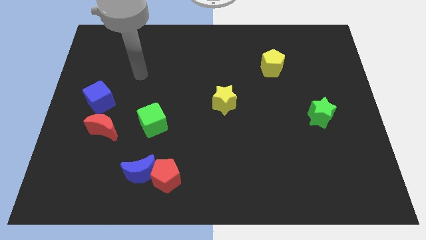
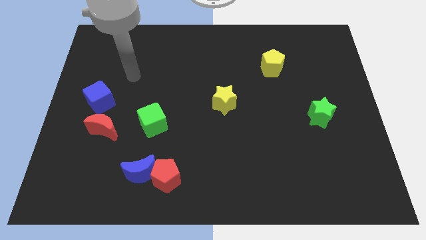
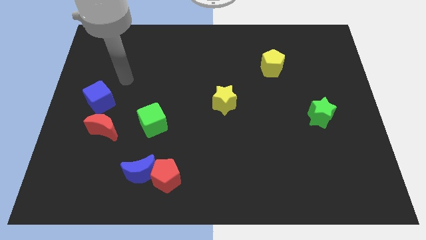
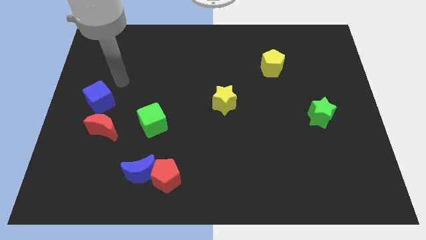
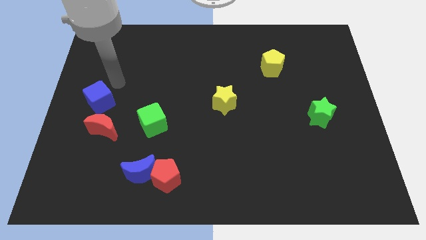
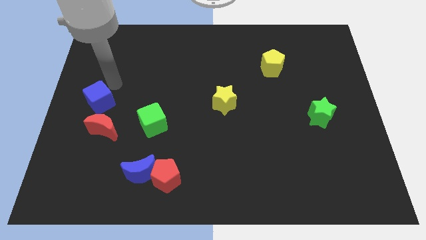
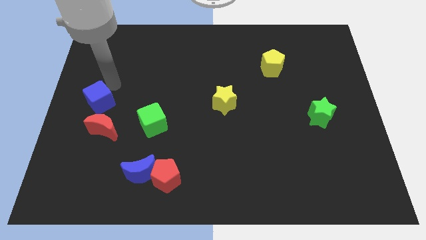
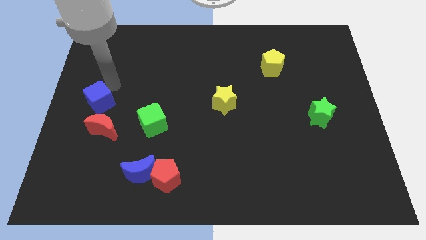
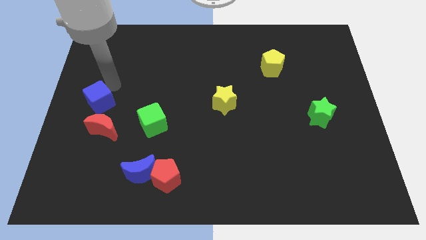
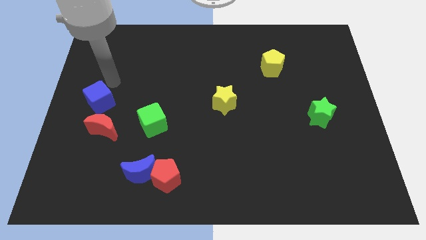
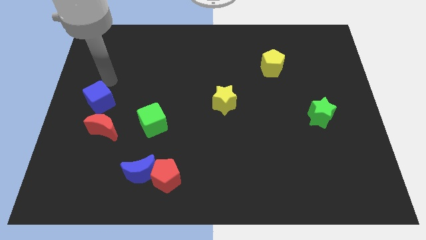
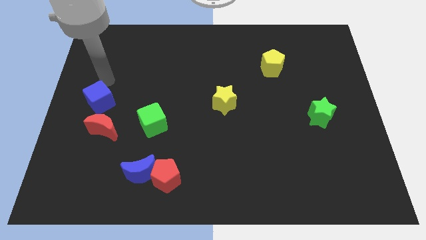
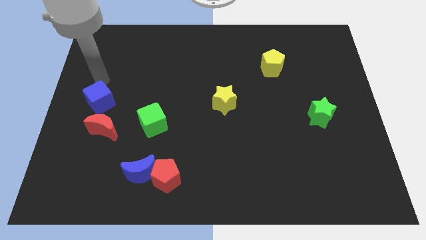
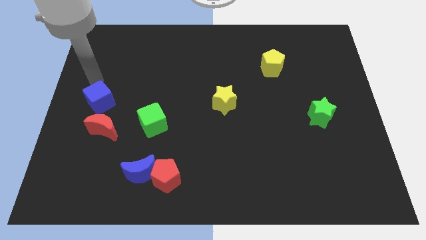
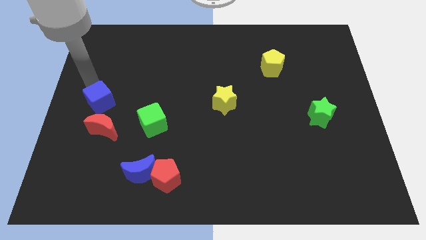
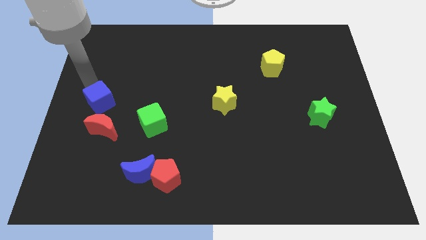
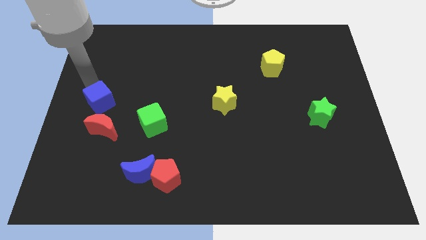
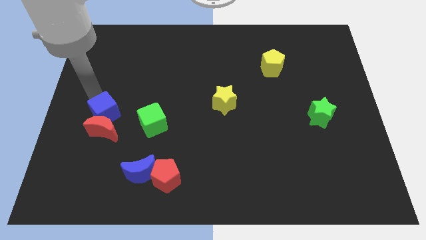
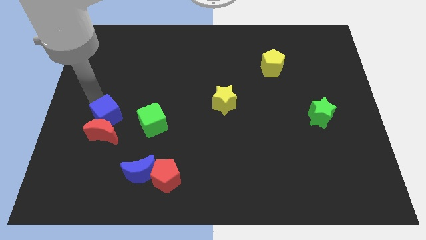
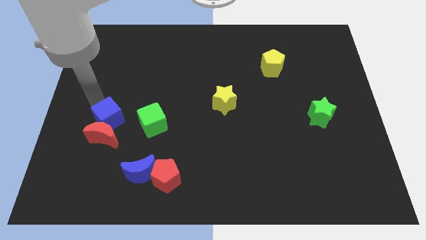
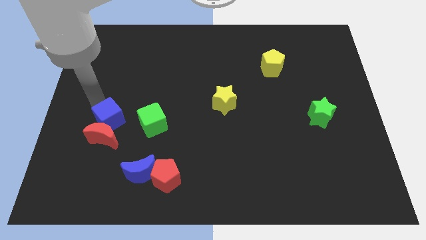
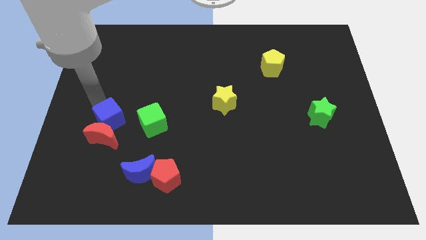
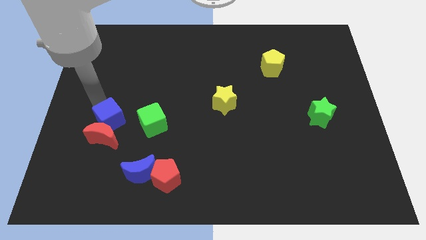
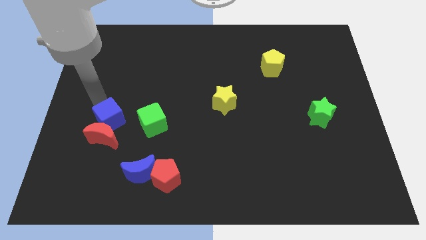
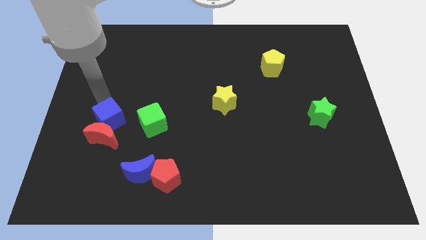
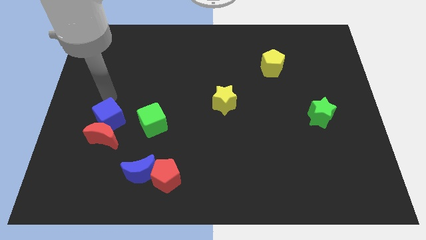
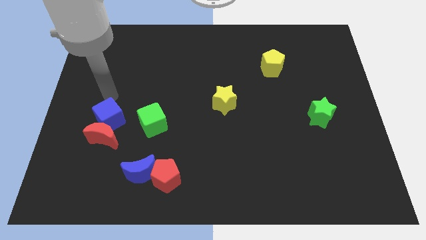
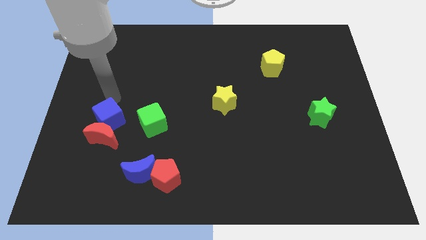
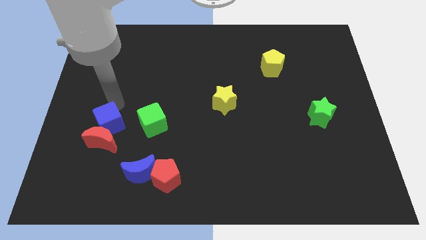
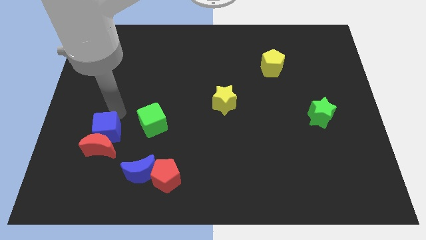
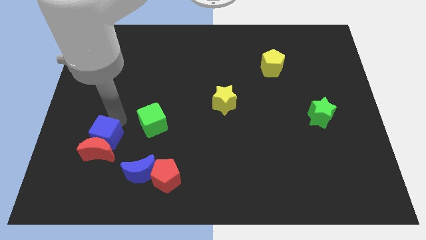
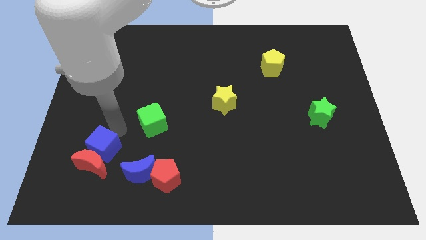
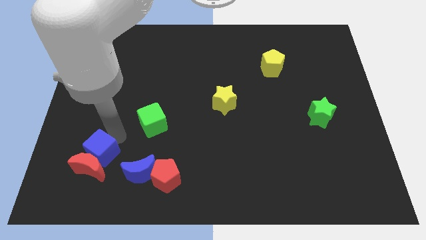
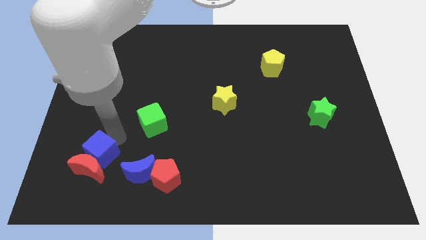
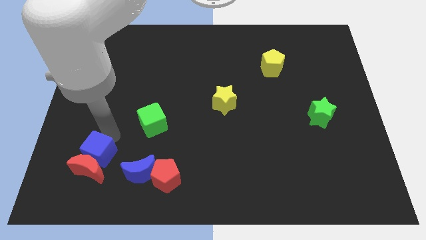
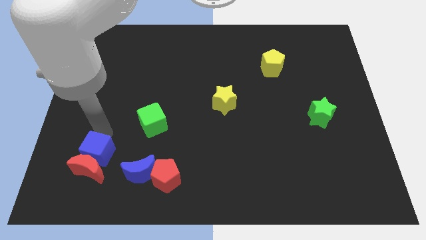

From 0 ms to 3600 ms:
move the blue cube into the red moon left to blue moon

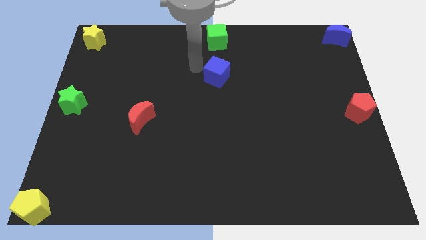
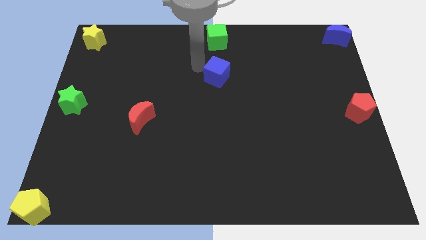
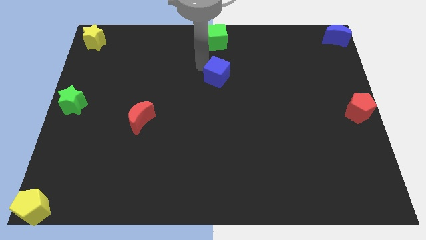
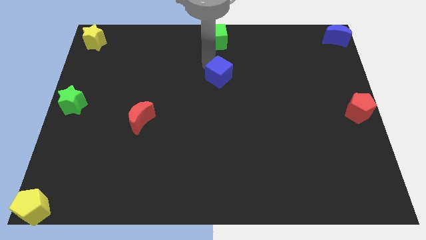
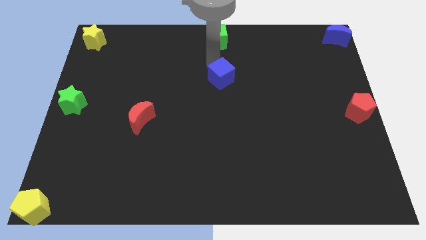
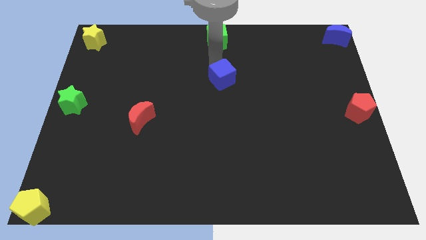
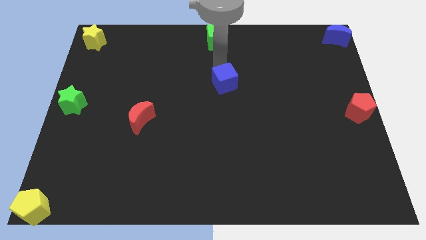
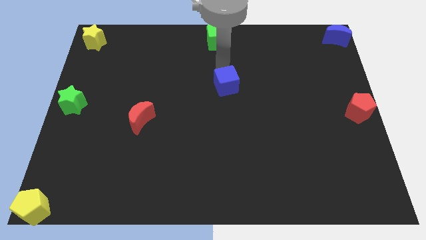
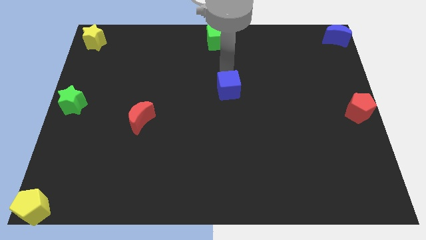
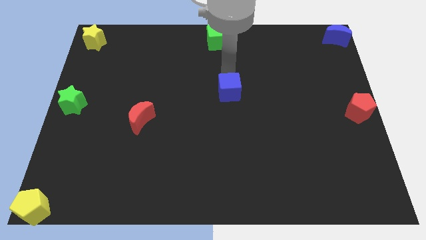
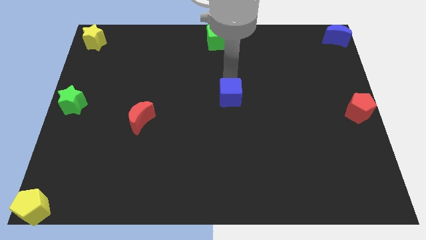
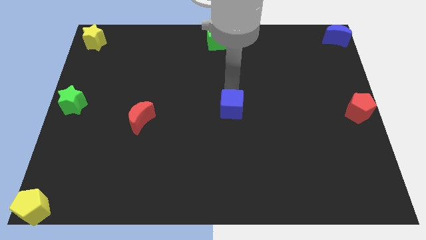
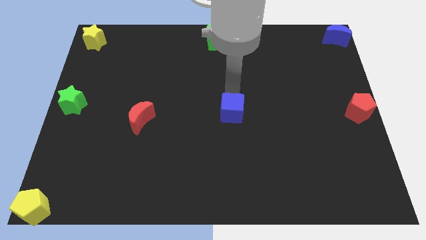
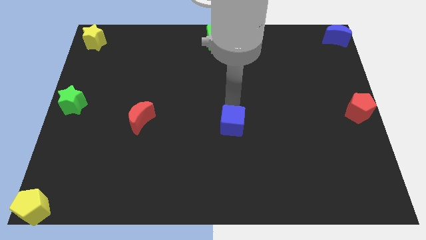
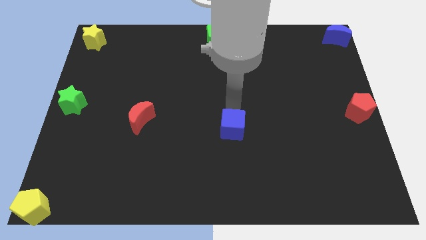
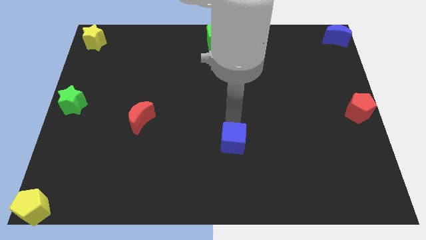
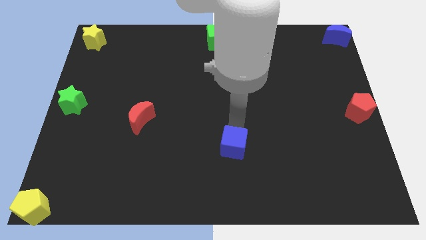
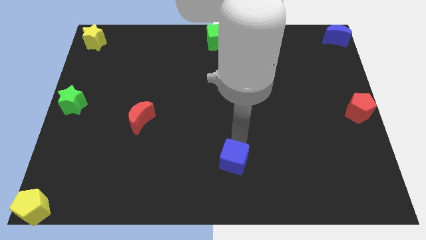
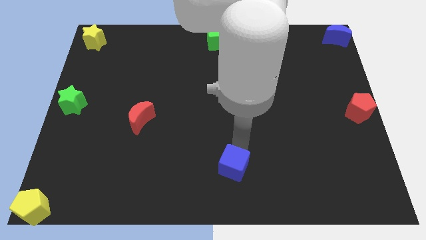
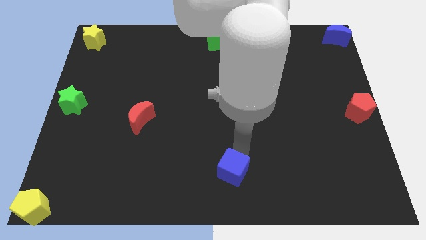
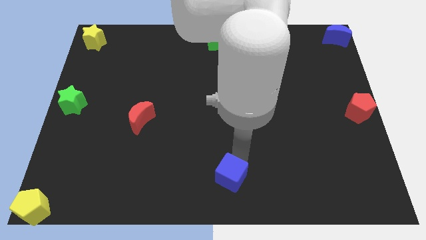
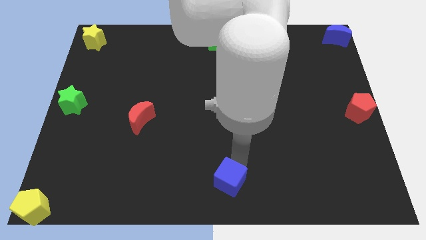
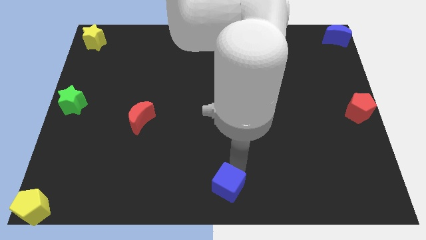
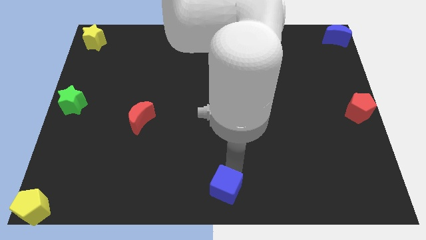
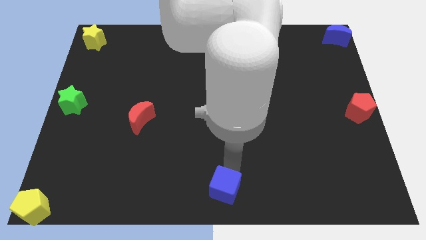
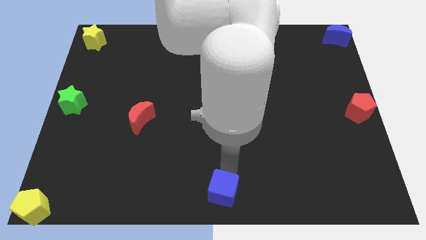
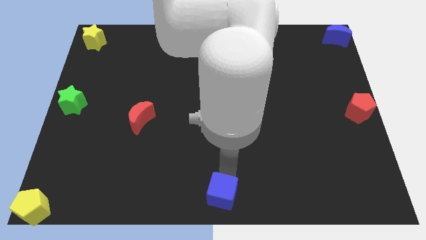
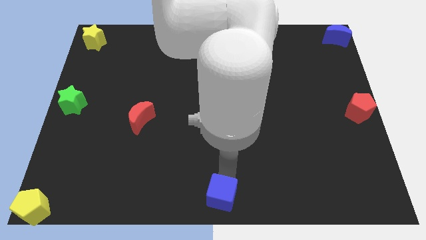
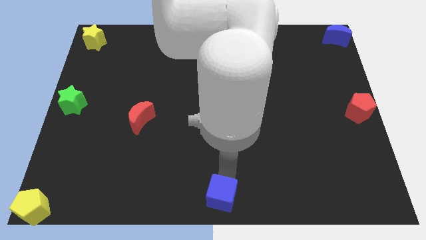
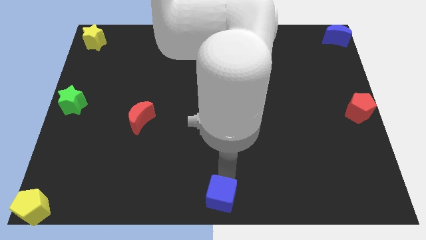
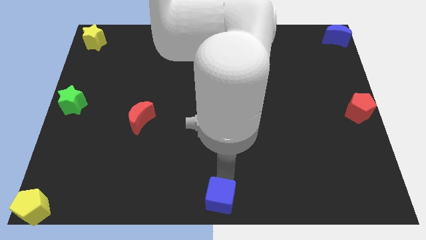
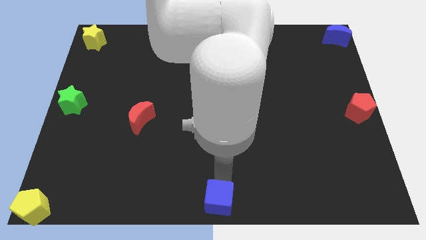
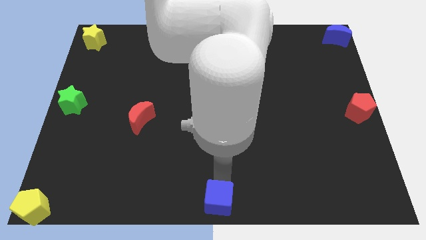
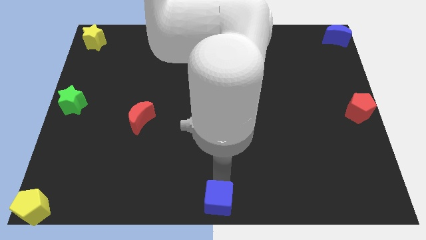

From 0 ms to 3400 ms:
place the blue cube to the bottom middle of the board

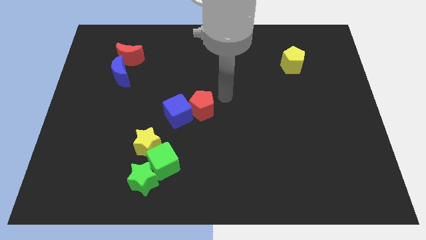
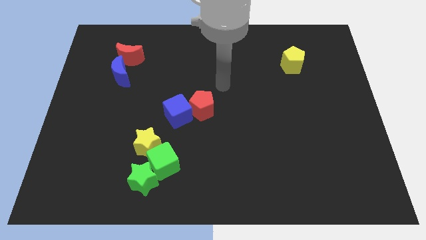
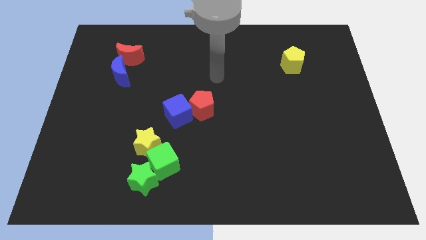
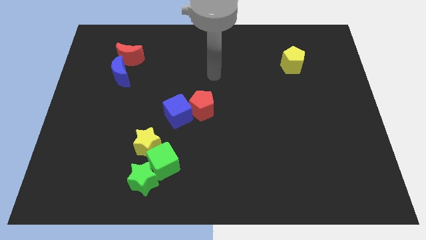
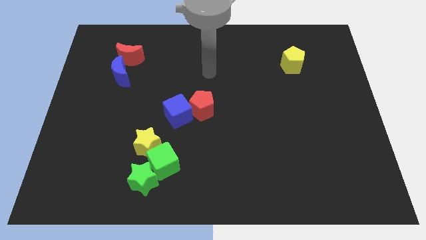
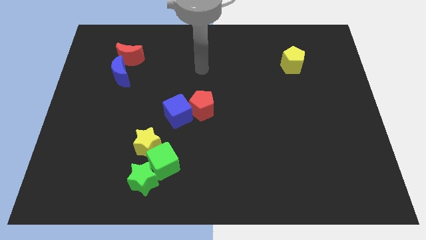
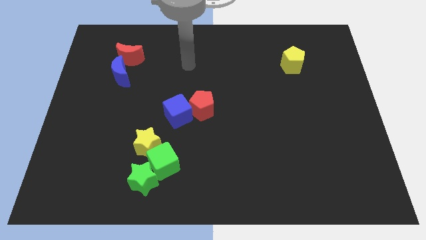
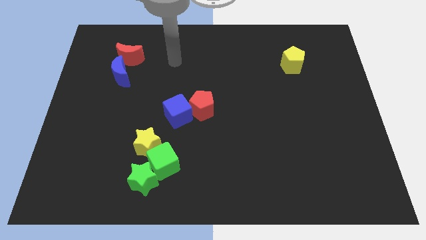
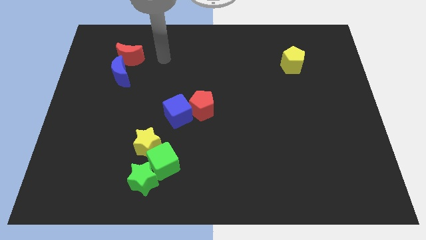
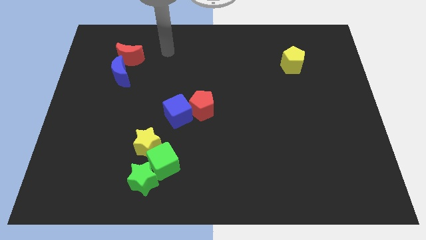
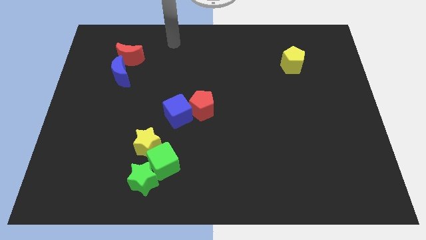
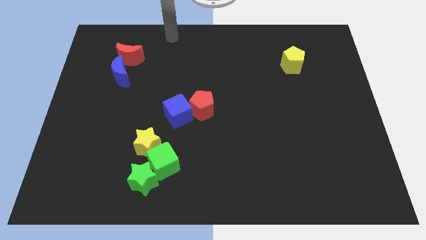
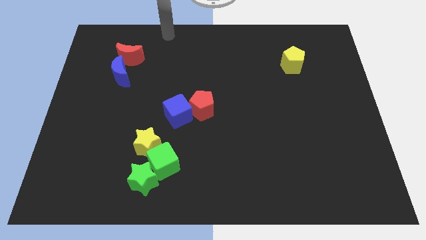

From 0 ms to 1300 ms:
move the arm away from the red pentagon

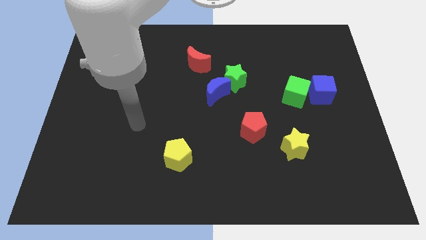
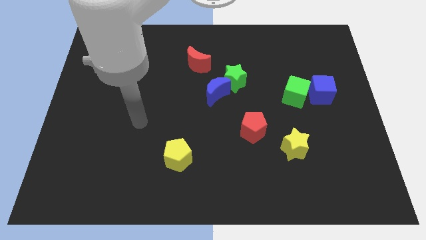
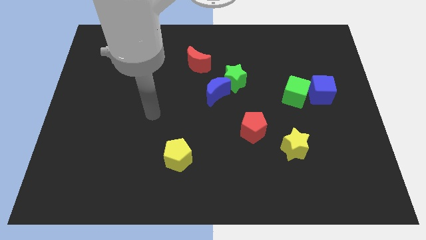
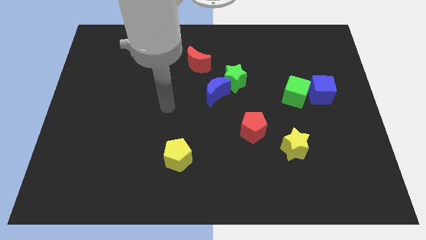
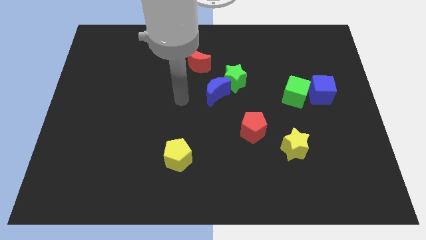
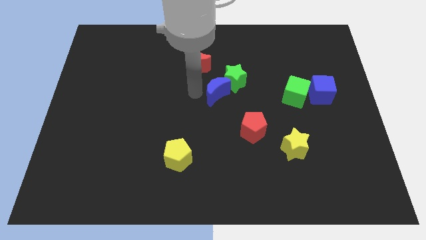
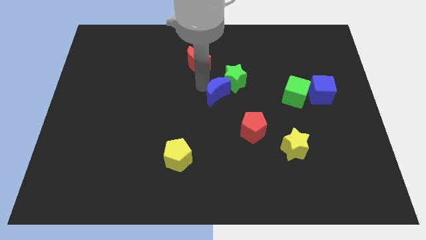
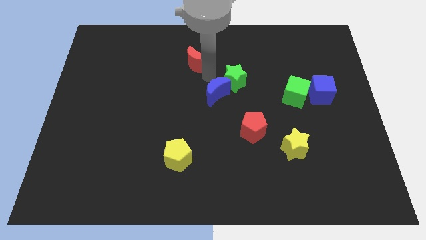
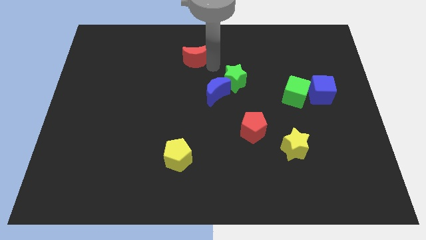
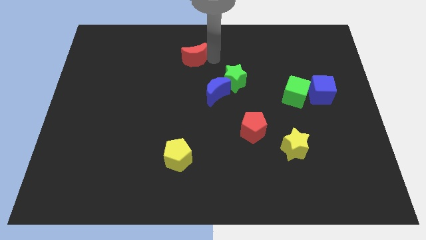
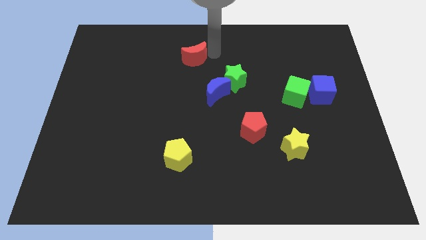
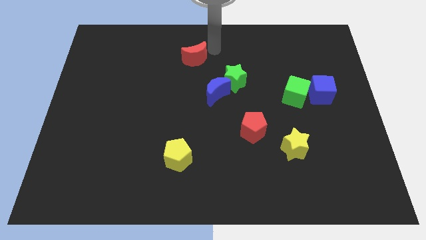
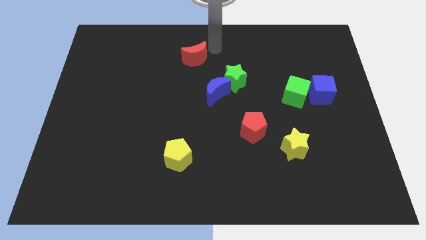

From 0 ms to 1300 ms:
push the red crescent slightly upwards
